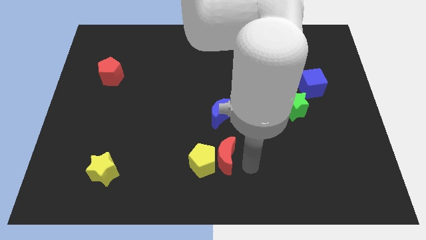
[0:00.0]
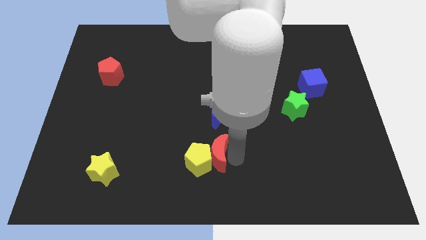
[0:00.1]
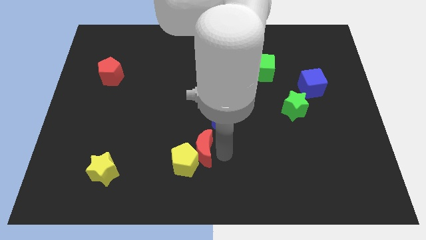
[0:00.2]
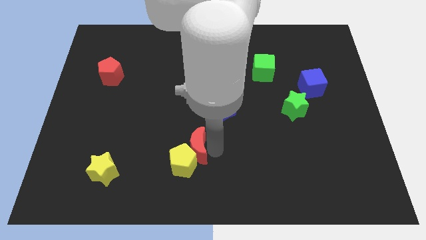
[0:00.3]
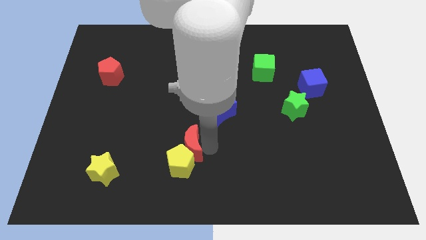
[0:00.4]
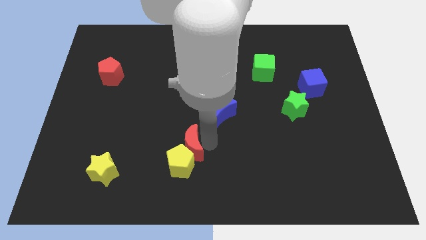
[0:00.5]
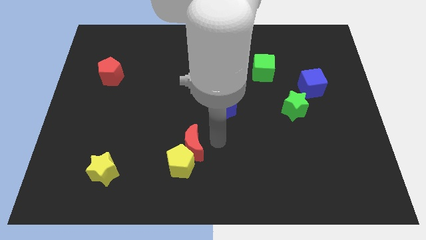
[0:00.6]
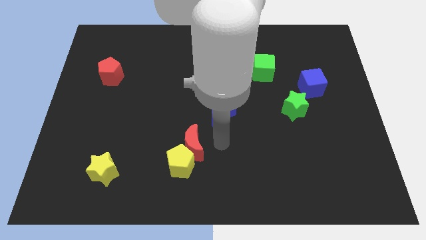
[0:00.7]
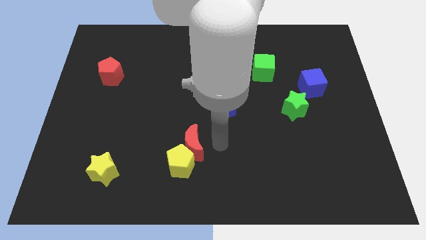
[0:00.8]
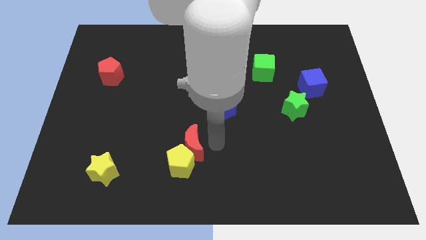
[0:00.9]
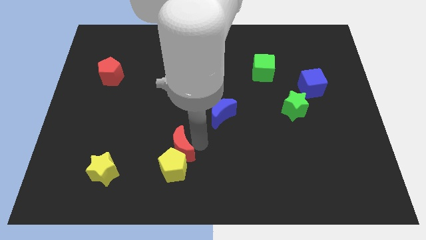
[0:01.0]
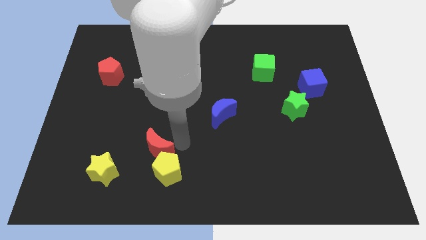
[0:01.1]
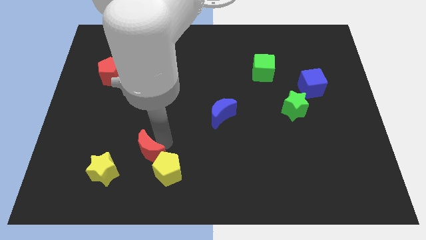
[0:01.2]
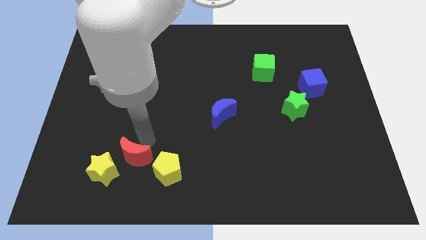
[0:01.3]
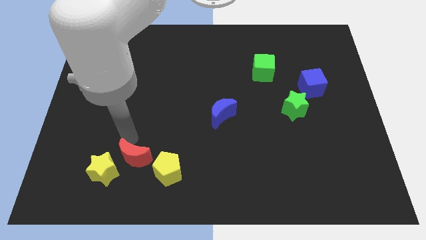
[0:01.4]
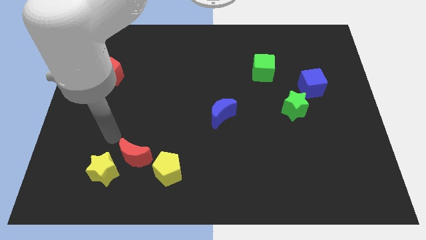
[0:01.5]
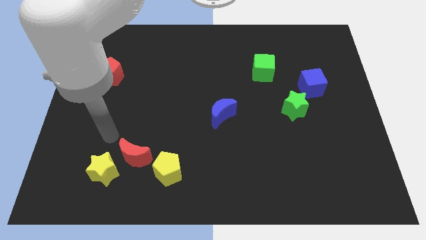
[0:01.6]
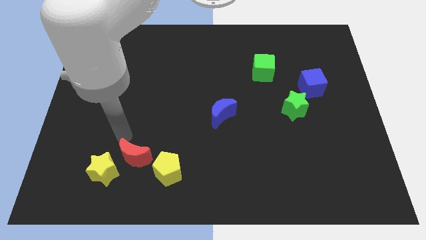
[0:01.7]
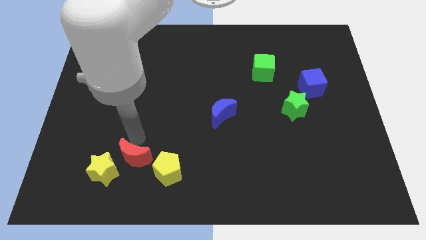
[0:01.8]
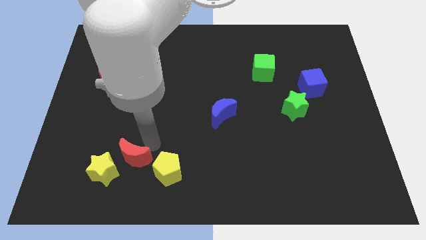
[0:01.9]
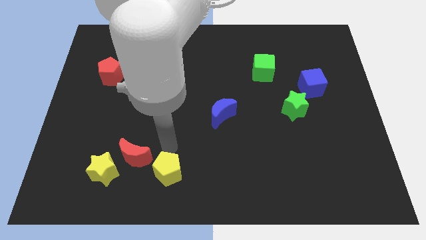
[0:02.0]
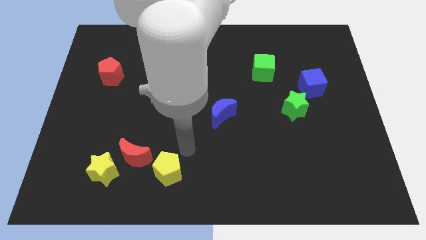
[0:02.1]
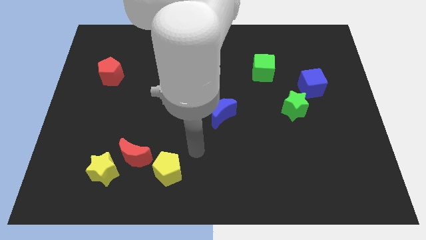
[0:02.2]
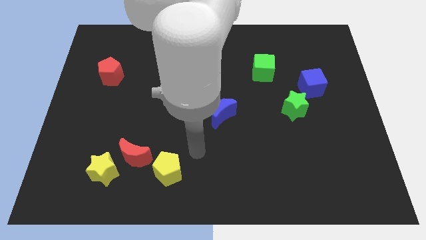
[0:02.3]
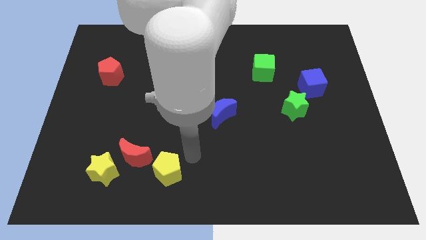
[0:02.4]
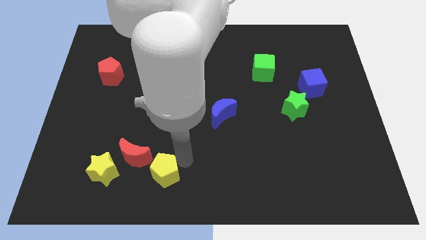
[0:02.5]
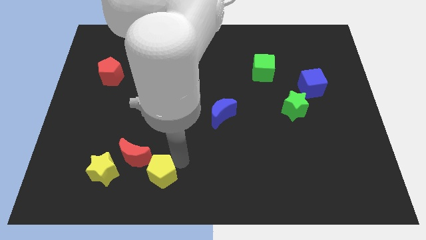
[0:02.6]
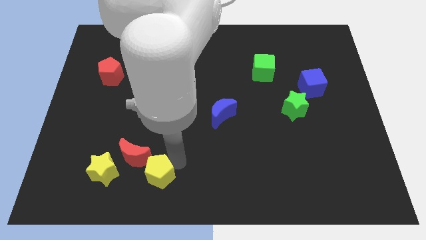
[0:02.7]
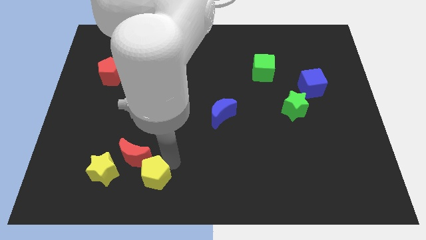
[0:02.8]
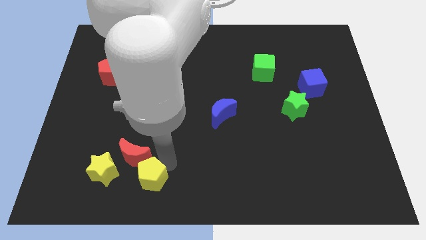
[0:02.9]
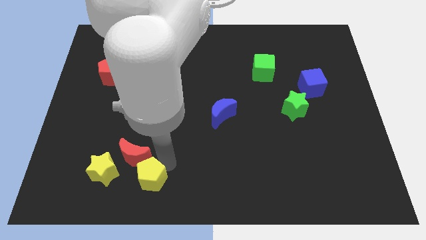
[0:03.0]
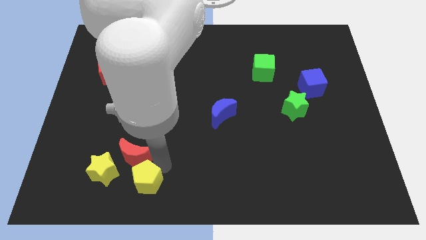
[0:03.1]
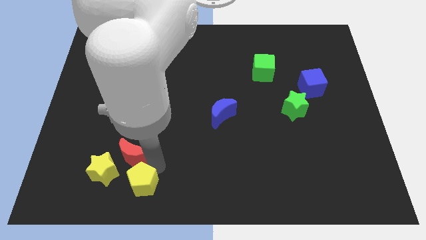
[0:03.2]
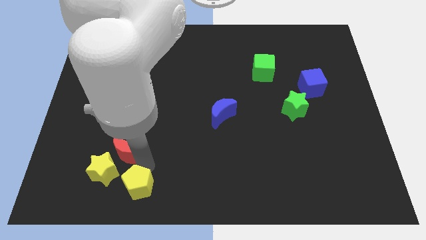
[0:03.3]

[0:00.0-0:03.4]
push the red crescent and the yellow pentagon towards the yellow star

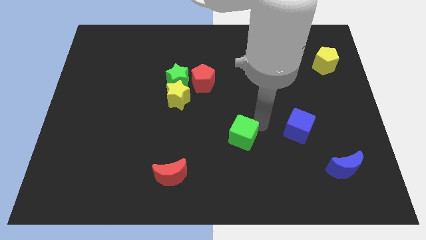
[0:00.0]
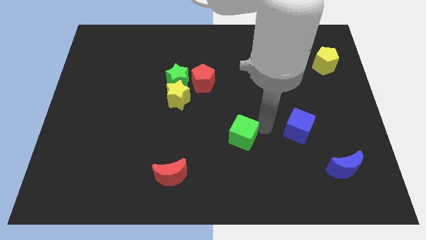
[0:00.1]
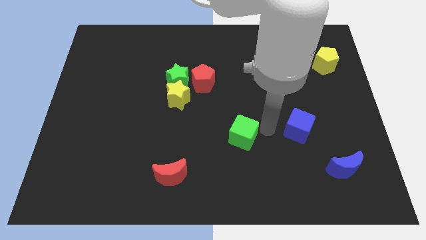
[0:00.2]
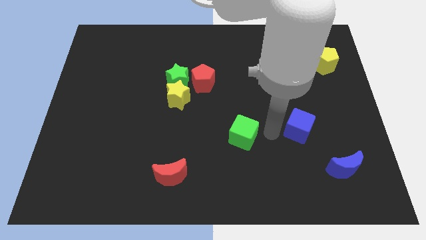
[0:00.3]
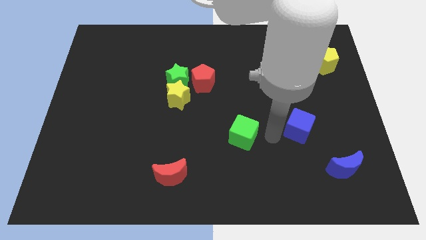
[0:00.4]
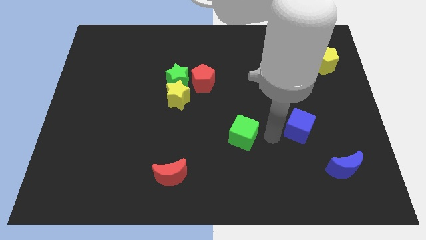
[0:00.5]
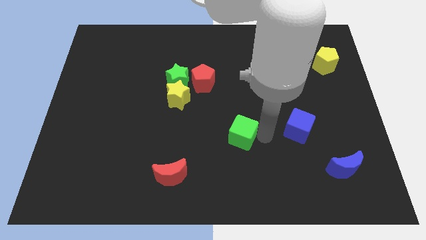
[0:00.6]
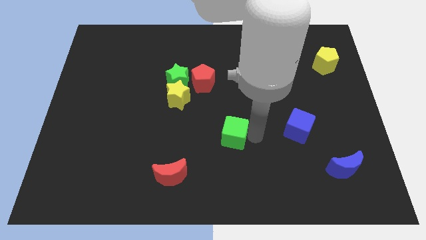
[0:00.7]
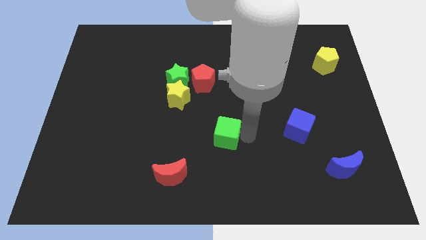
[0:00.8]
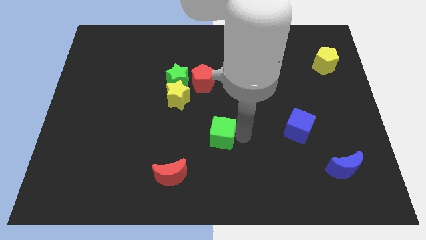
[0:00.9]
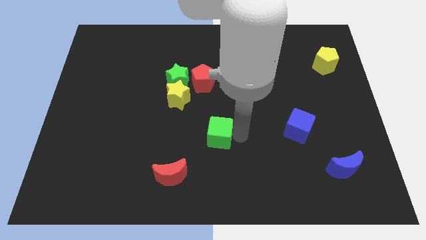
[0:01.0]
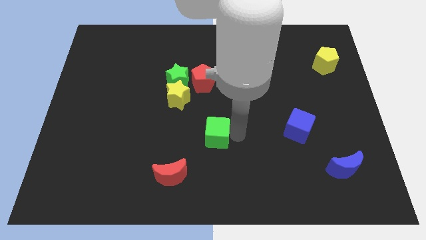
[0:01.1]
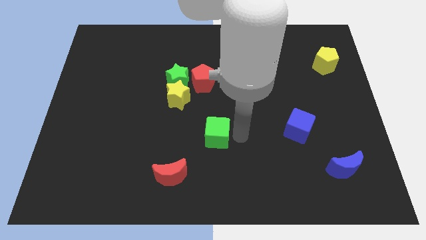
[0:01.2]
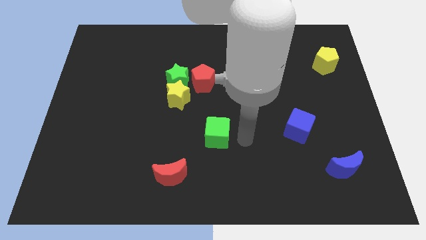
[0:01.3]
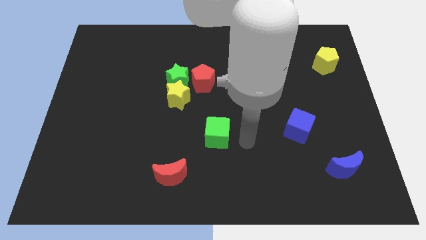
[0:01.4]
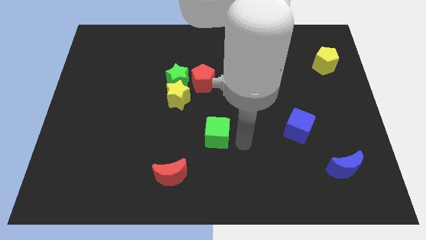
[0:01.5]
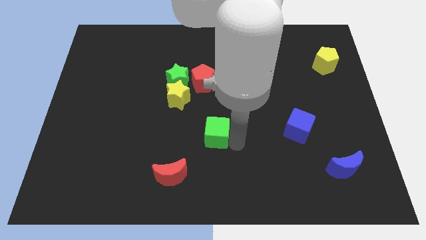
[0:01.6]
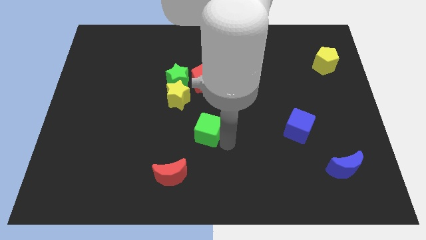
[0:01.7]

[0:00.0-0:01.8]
slide the green cube to the left

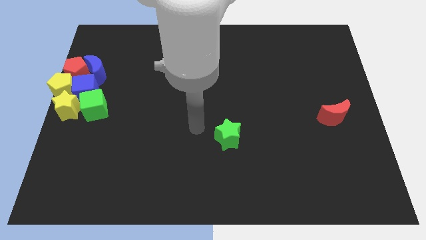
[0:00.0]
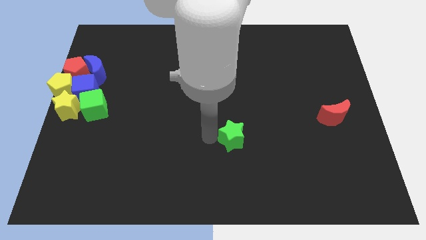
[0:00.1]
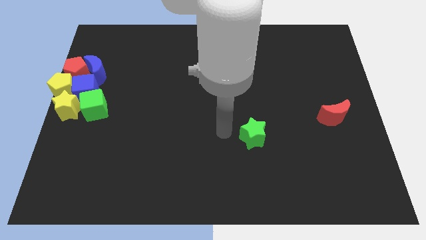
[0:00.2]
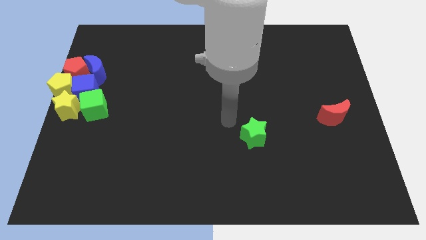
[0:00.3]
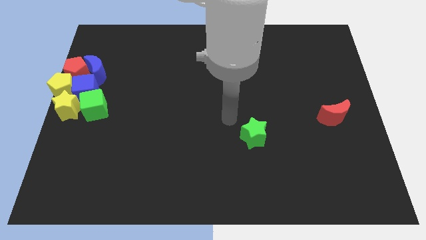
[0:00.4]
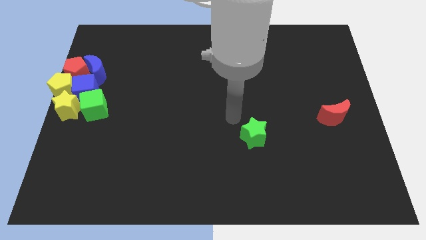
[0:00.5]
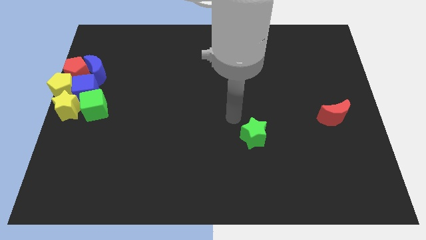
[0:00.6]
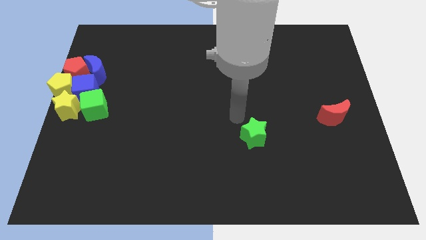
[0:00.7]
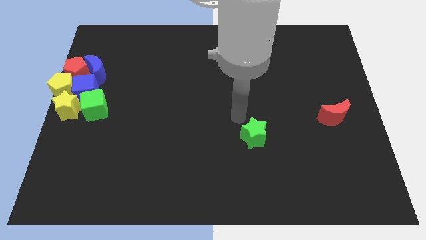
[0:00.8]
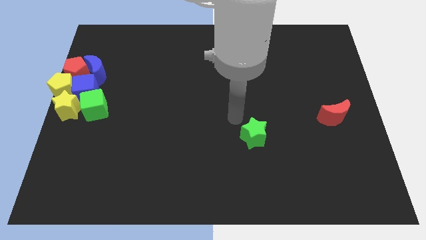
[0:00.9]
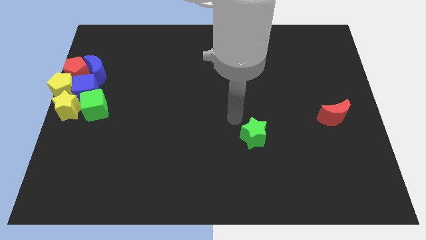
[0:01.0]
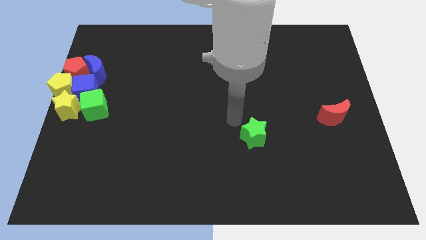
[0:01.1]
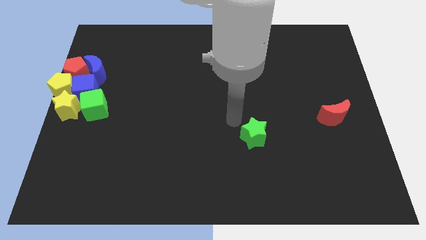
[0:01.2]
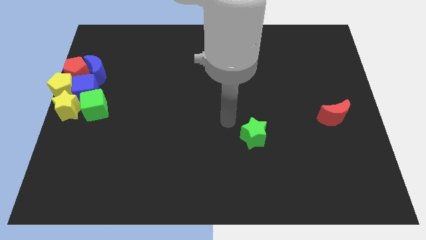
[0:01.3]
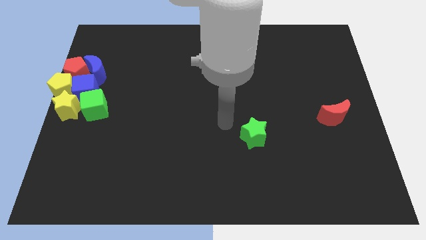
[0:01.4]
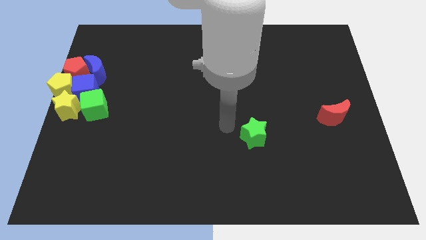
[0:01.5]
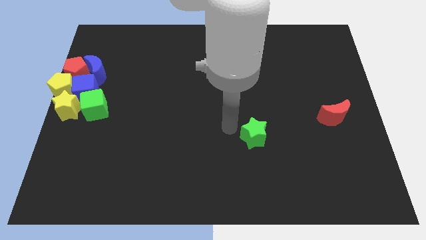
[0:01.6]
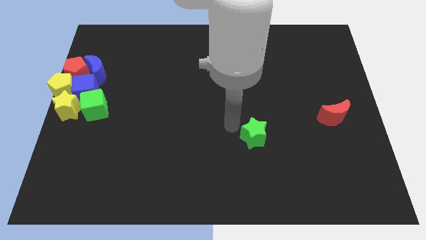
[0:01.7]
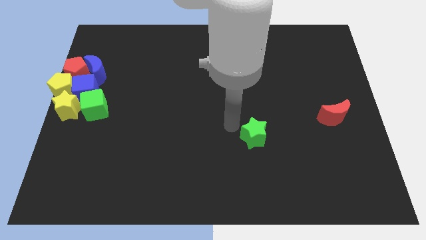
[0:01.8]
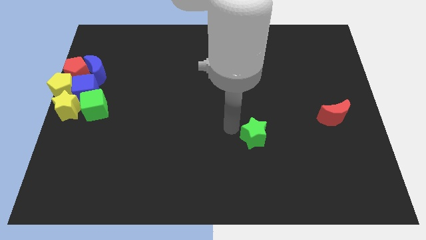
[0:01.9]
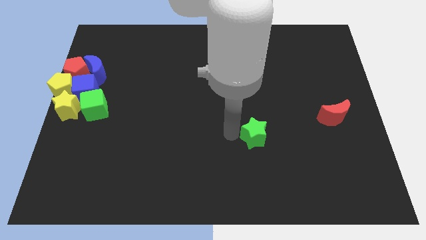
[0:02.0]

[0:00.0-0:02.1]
reposition the green star

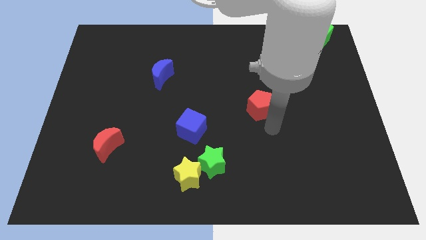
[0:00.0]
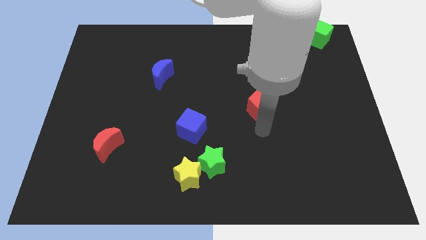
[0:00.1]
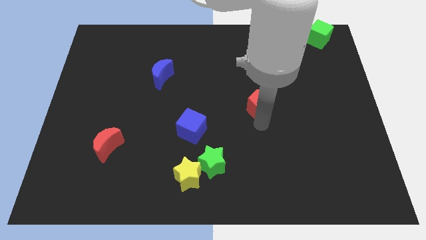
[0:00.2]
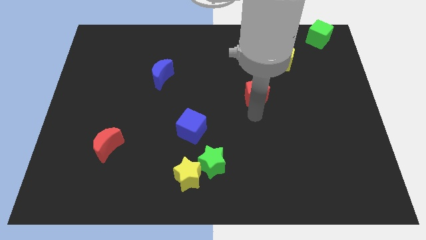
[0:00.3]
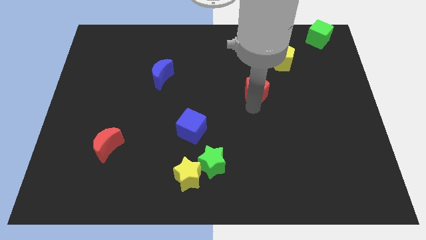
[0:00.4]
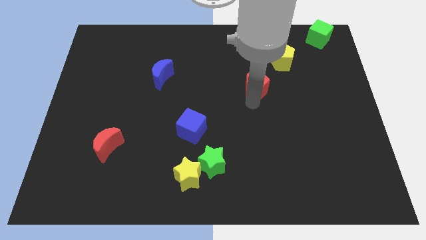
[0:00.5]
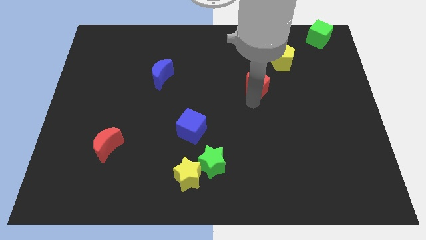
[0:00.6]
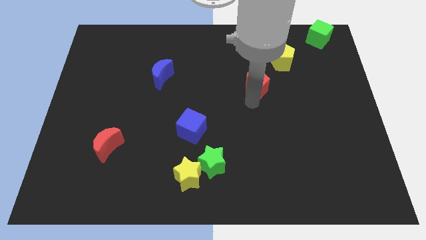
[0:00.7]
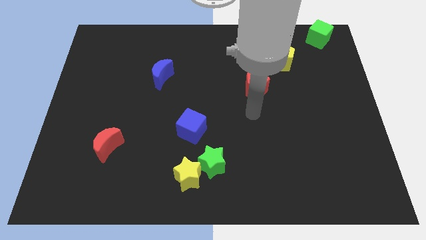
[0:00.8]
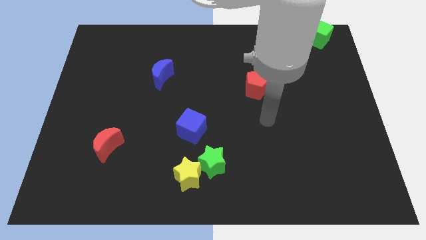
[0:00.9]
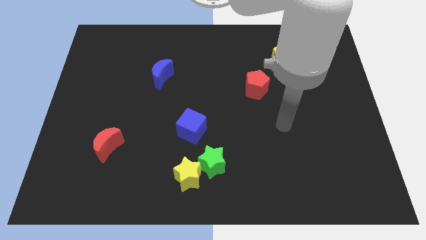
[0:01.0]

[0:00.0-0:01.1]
push red pentagon upwards

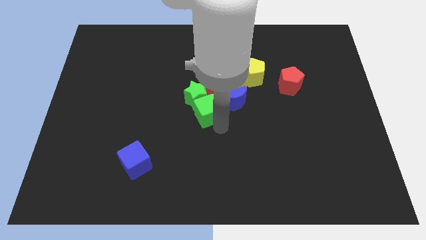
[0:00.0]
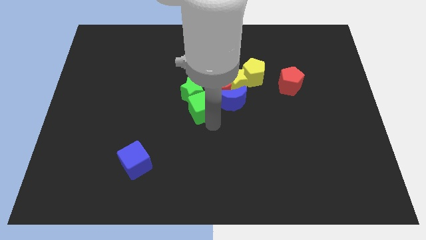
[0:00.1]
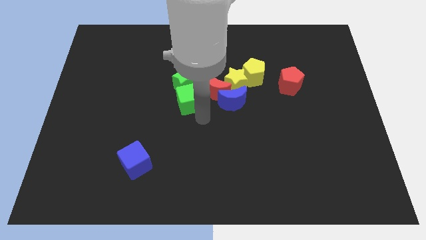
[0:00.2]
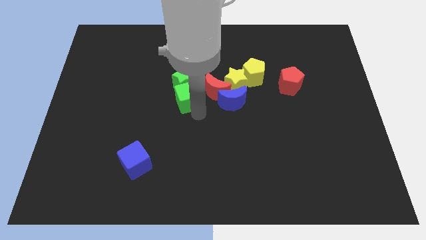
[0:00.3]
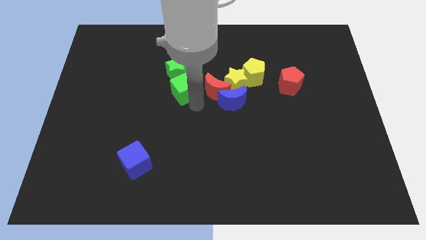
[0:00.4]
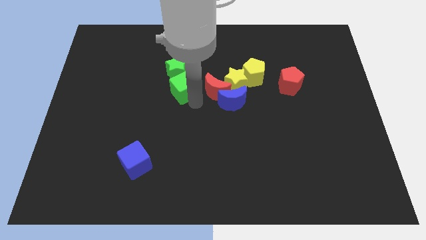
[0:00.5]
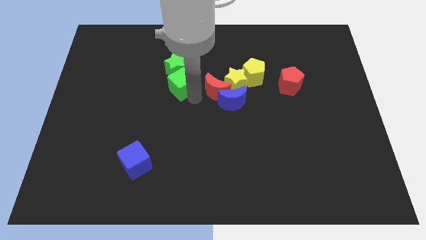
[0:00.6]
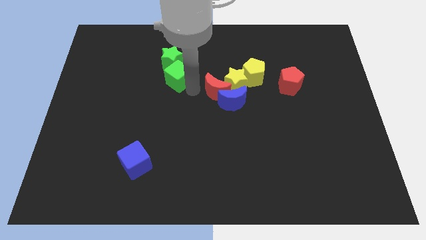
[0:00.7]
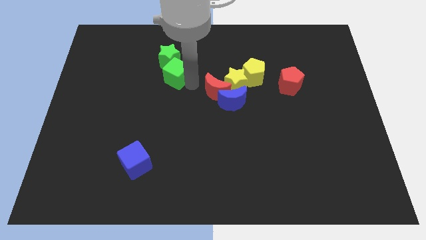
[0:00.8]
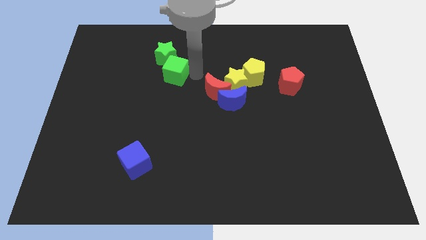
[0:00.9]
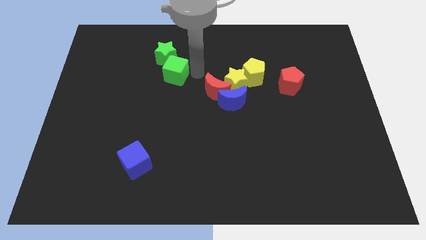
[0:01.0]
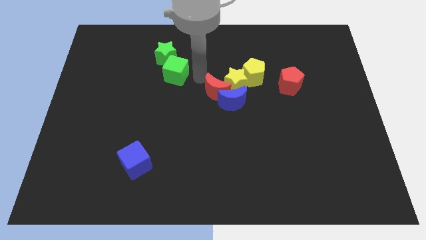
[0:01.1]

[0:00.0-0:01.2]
push the green cube into the center
